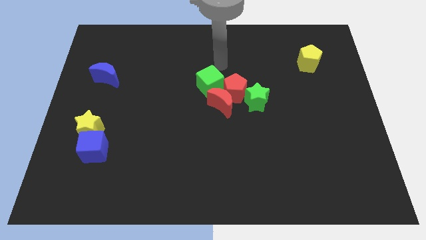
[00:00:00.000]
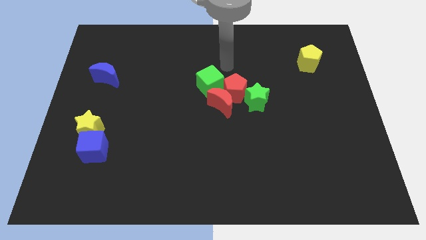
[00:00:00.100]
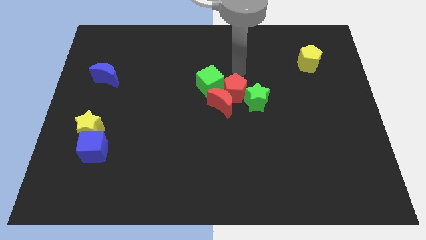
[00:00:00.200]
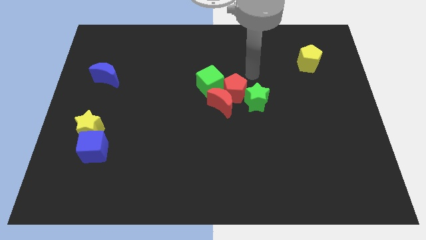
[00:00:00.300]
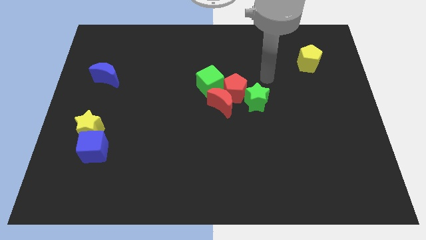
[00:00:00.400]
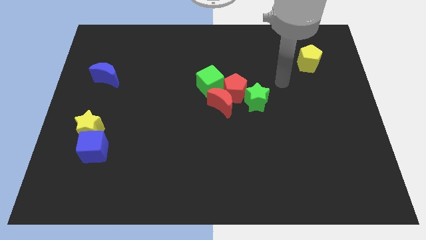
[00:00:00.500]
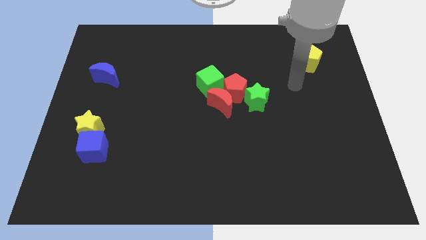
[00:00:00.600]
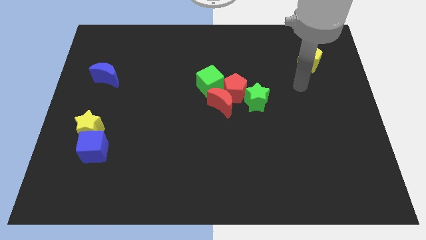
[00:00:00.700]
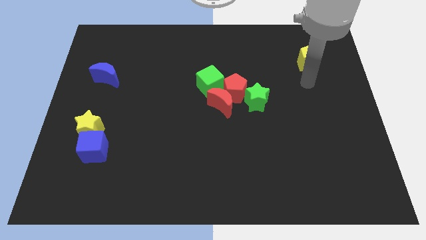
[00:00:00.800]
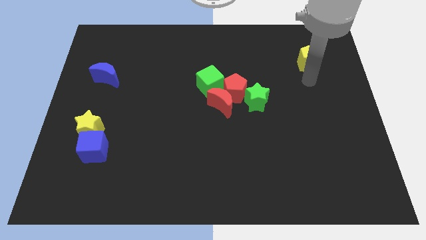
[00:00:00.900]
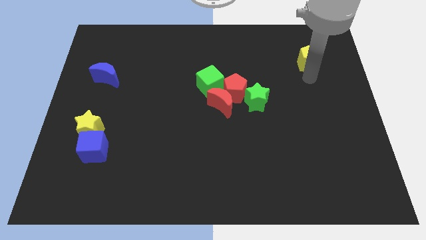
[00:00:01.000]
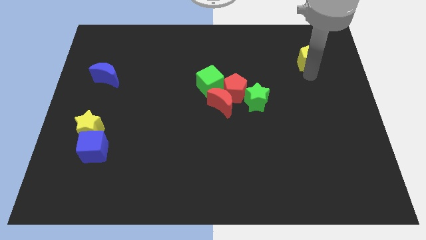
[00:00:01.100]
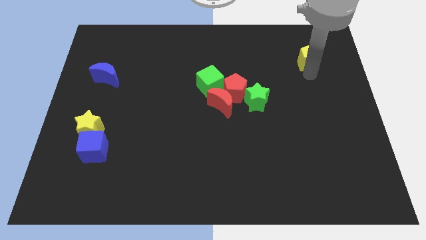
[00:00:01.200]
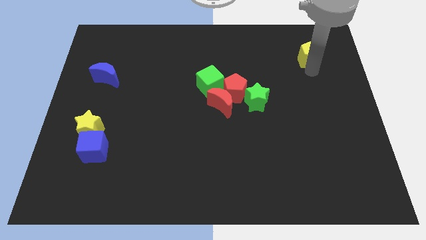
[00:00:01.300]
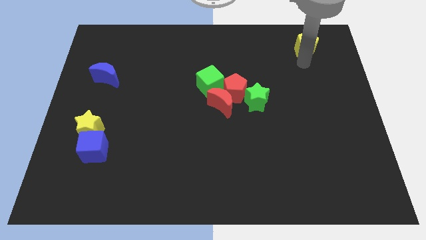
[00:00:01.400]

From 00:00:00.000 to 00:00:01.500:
move the yellow pentagon slightly up

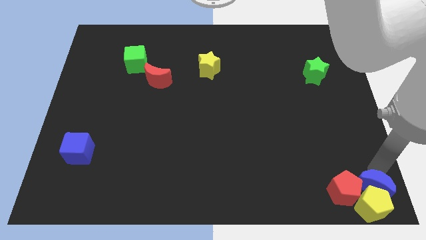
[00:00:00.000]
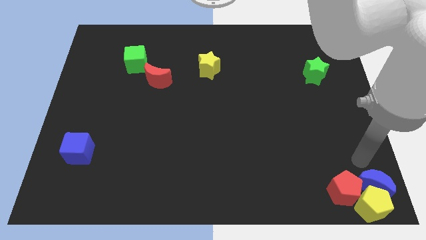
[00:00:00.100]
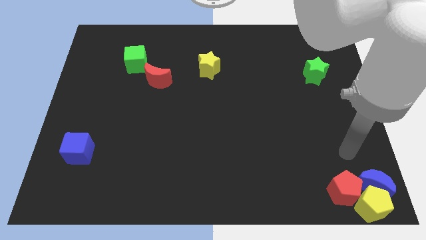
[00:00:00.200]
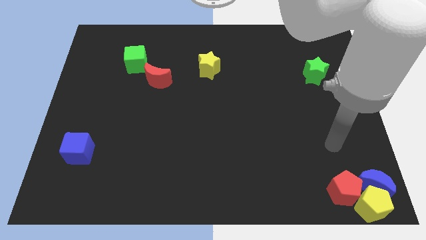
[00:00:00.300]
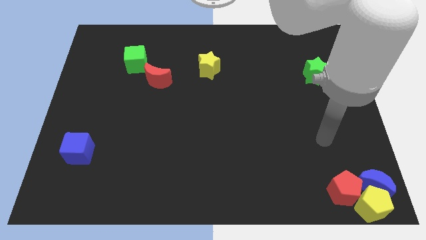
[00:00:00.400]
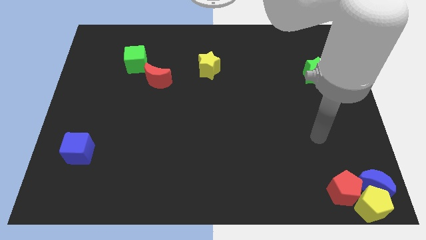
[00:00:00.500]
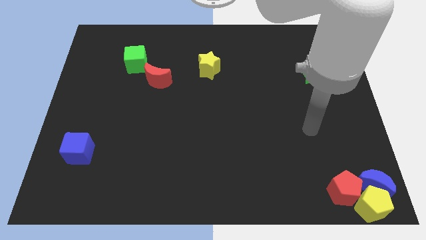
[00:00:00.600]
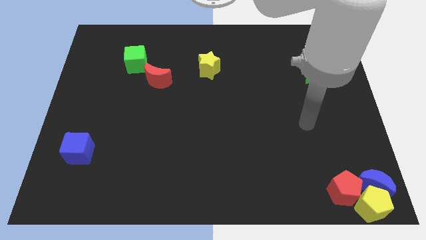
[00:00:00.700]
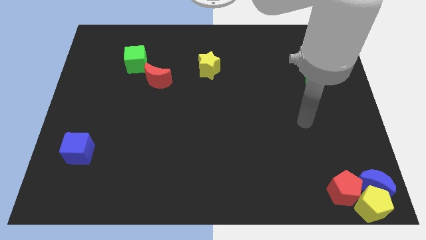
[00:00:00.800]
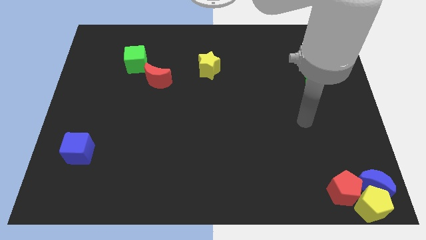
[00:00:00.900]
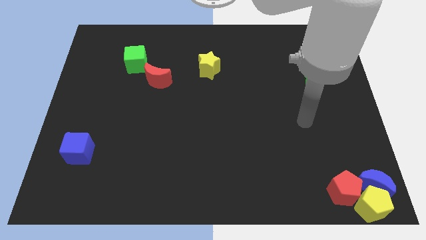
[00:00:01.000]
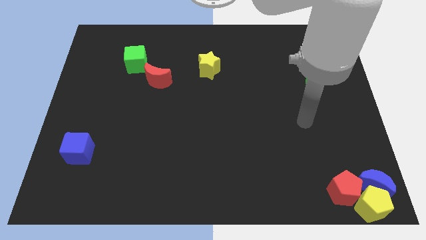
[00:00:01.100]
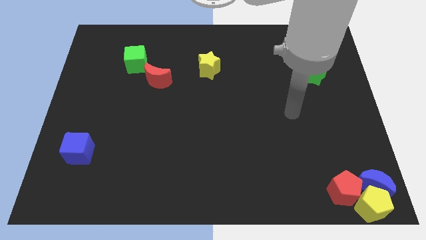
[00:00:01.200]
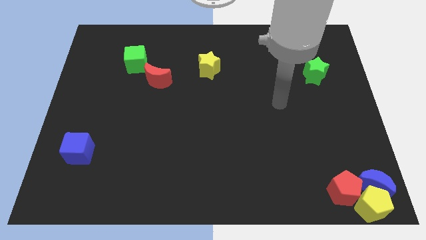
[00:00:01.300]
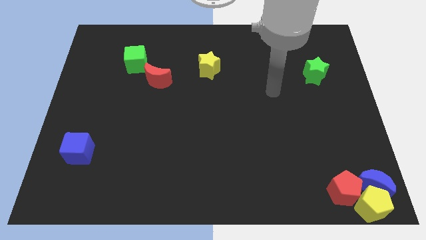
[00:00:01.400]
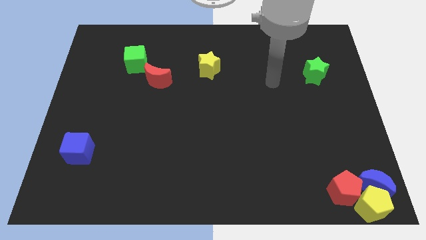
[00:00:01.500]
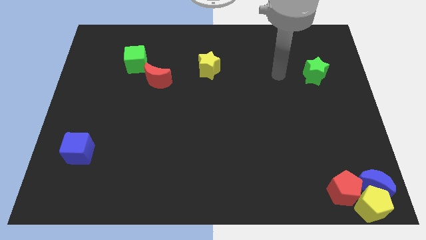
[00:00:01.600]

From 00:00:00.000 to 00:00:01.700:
move your arm towards the left side of the green star

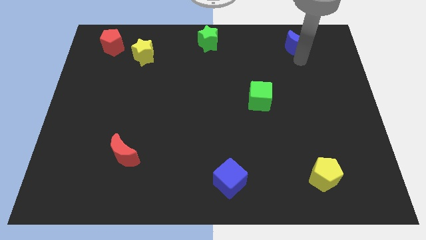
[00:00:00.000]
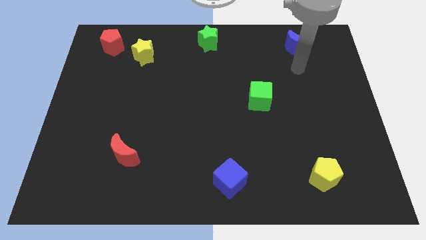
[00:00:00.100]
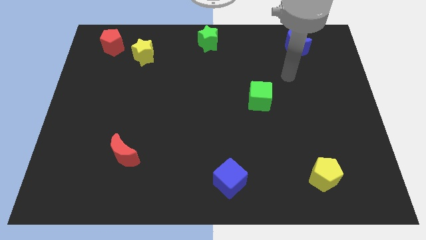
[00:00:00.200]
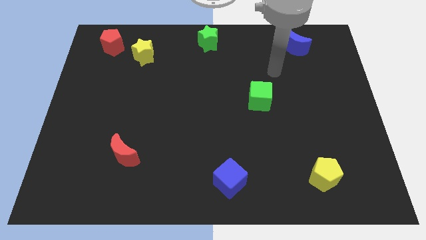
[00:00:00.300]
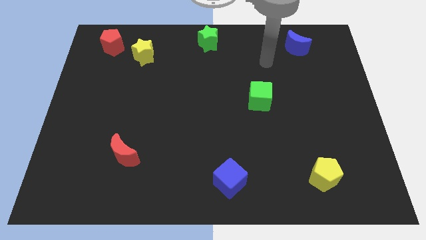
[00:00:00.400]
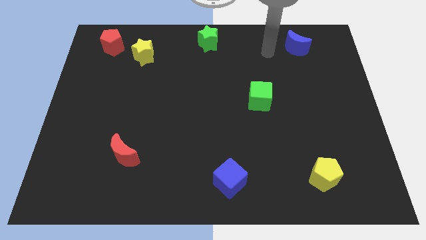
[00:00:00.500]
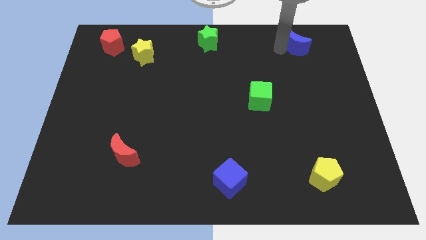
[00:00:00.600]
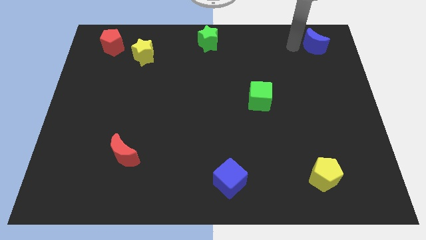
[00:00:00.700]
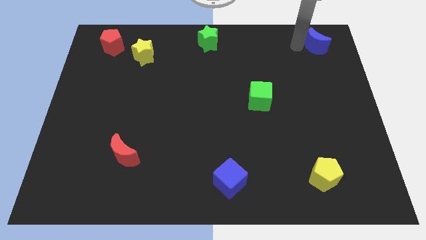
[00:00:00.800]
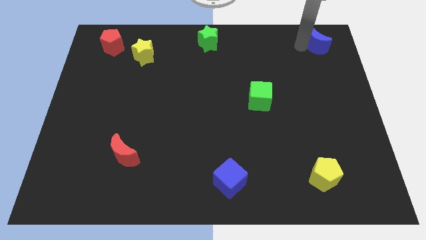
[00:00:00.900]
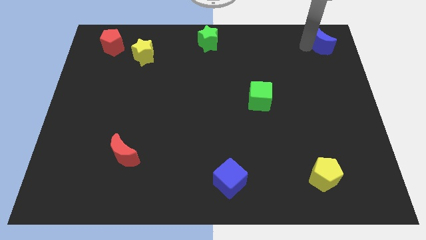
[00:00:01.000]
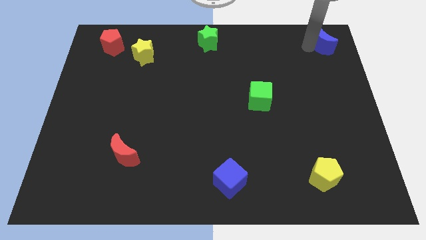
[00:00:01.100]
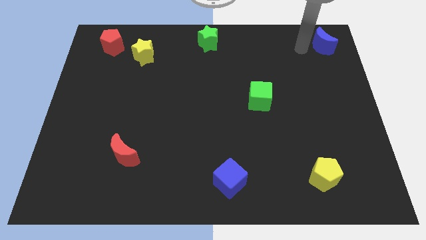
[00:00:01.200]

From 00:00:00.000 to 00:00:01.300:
place the blue crescent towards the top right corner of the board

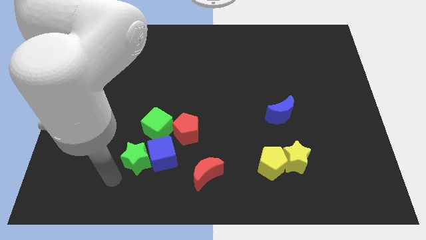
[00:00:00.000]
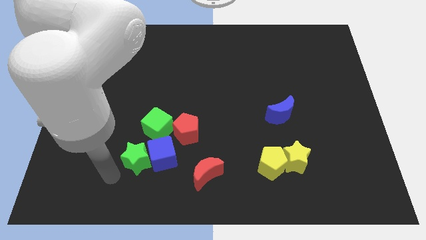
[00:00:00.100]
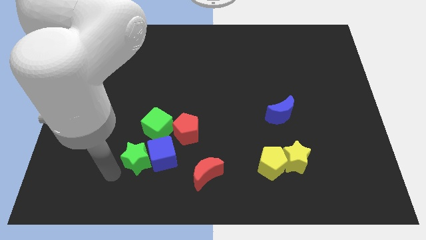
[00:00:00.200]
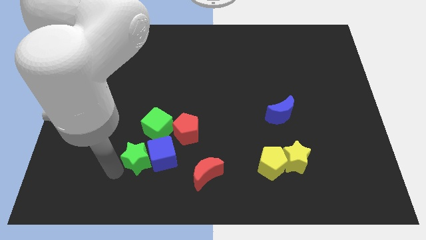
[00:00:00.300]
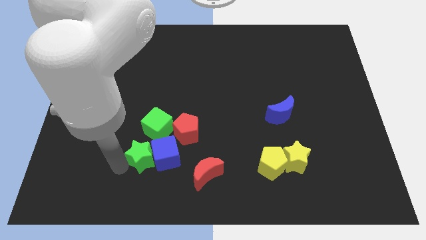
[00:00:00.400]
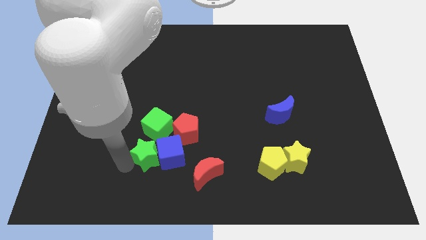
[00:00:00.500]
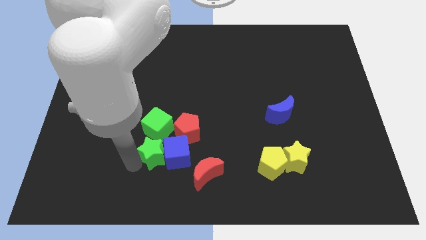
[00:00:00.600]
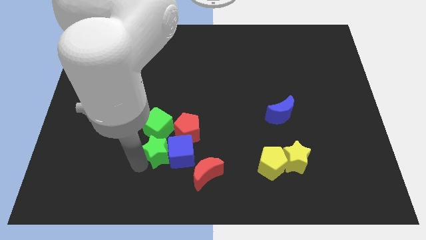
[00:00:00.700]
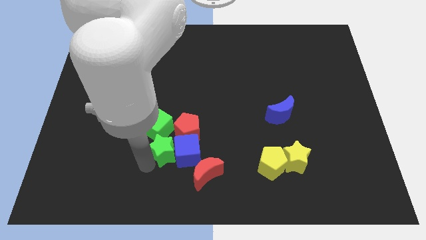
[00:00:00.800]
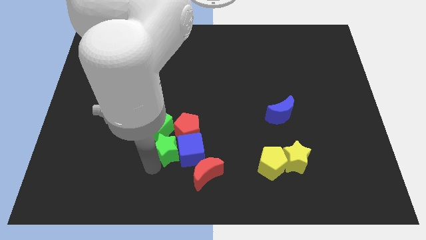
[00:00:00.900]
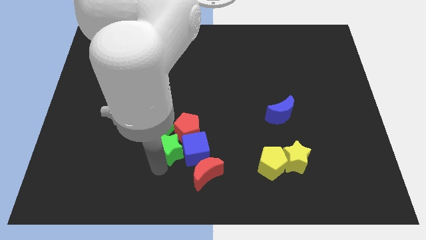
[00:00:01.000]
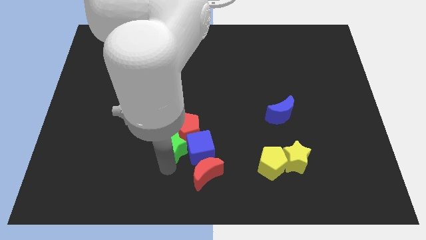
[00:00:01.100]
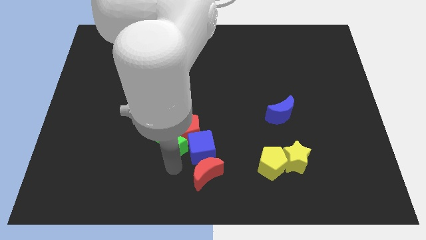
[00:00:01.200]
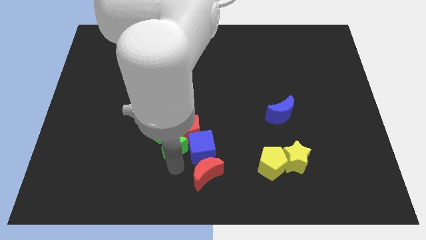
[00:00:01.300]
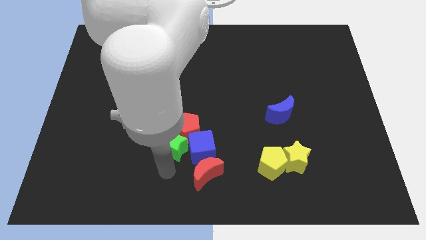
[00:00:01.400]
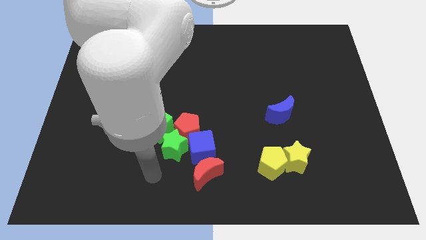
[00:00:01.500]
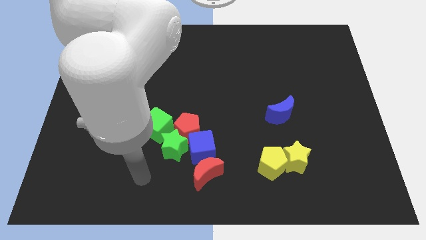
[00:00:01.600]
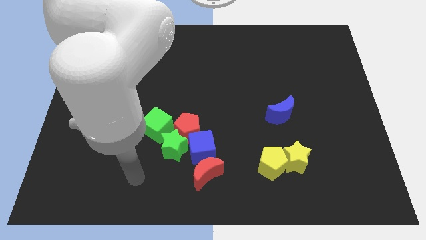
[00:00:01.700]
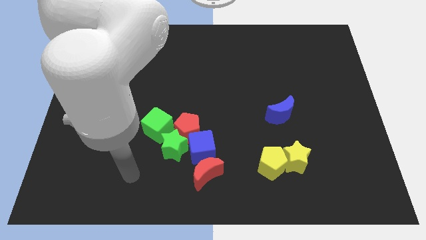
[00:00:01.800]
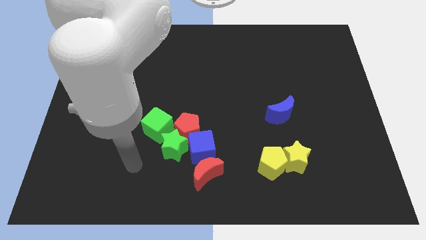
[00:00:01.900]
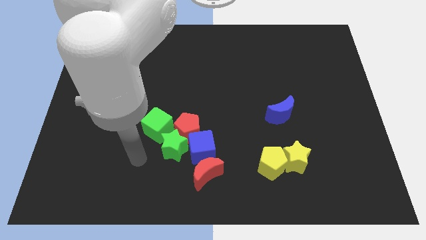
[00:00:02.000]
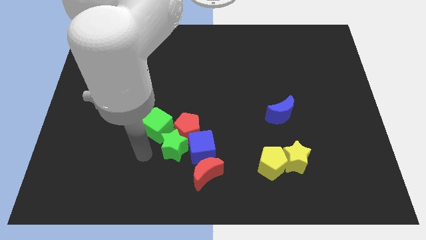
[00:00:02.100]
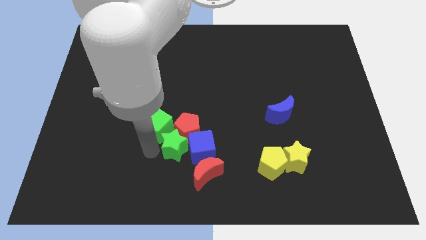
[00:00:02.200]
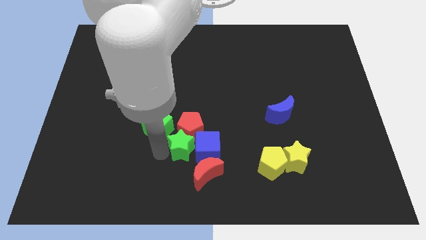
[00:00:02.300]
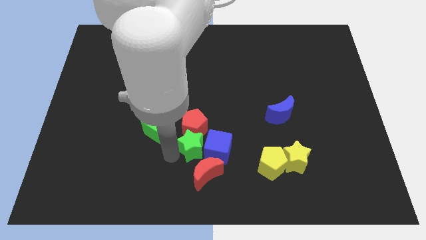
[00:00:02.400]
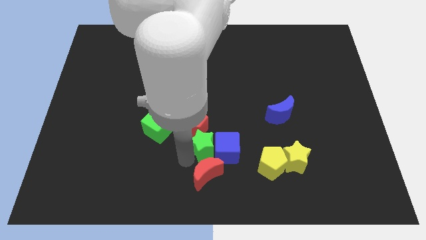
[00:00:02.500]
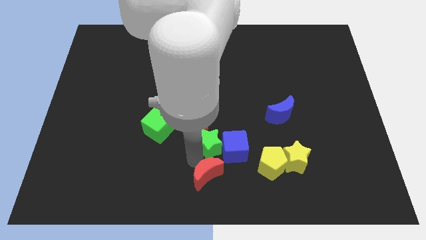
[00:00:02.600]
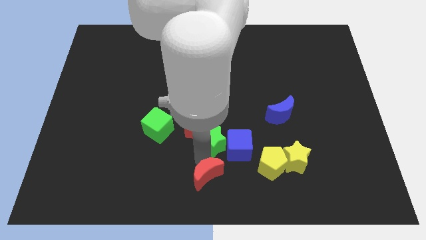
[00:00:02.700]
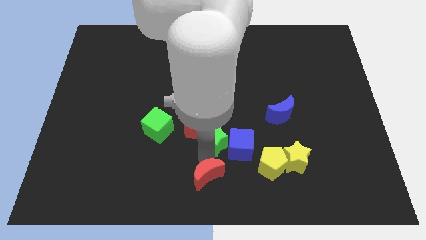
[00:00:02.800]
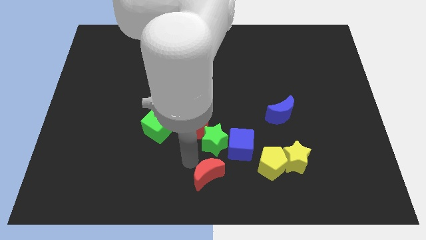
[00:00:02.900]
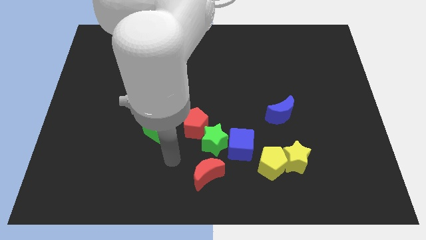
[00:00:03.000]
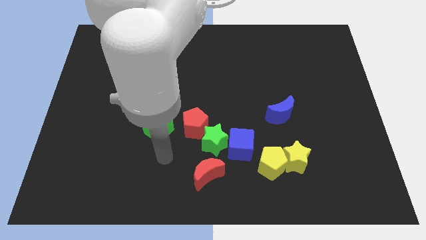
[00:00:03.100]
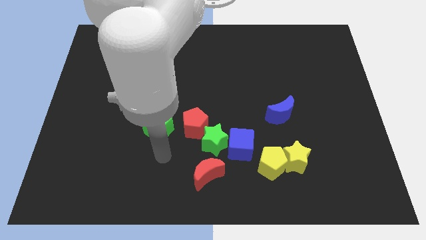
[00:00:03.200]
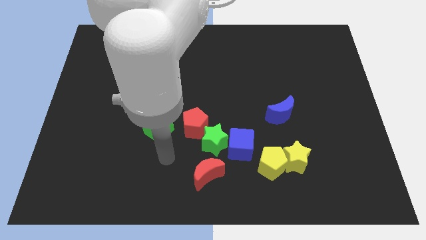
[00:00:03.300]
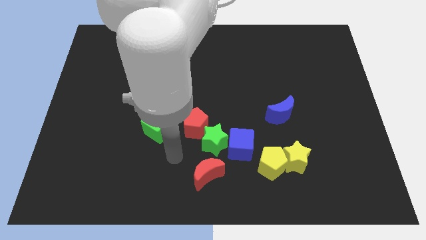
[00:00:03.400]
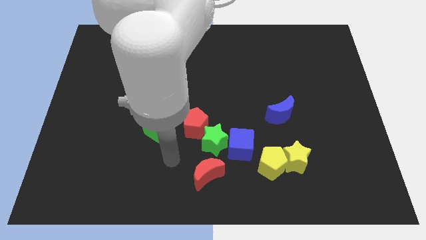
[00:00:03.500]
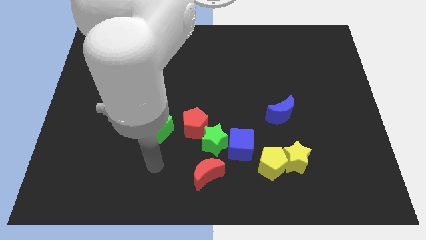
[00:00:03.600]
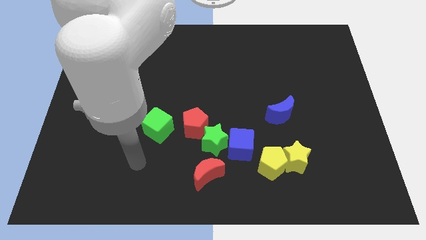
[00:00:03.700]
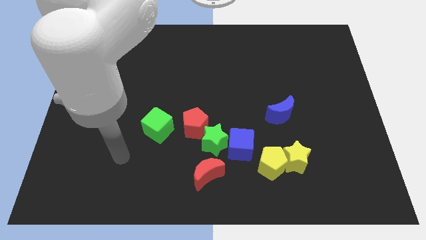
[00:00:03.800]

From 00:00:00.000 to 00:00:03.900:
move the green star and the blue cube diagonally to the bottom right of the red pentagon

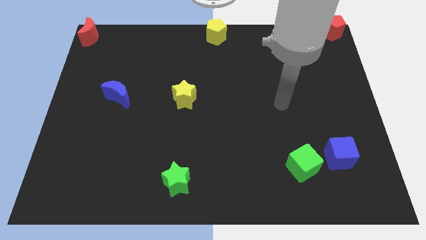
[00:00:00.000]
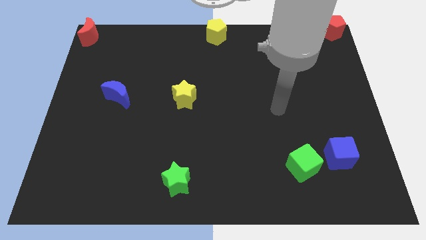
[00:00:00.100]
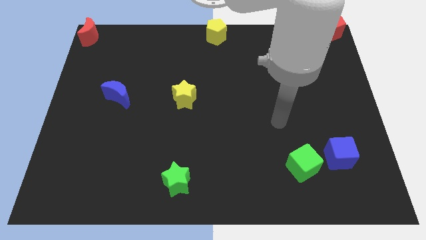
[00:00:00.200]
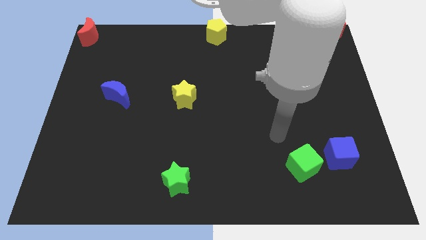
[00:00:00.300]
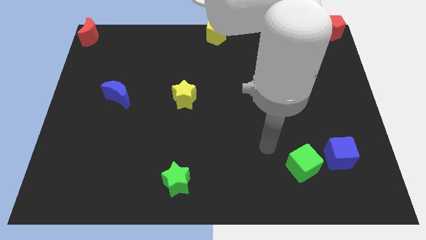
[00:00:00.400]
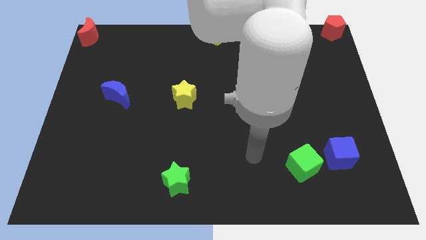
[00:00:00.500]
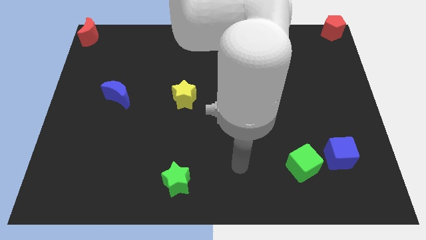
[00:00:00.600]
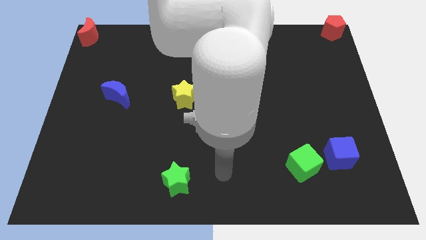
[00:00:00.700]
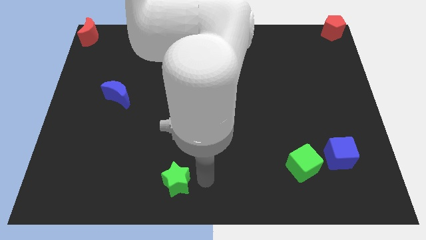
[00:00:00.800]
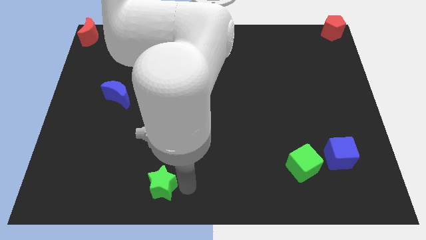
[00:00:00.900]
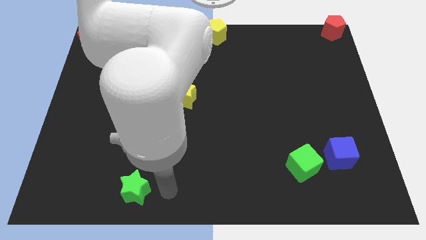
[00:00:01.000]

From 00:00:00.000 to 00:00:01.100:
slightly push the green star towards the left side of the board
